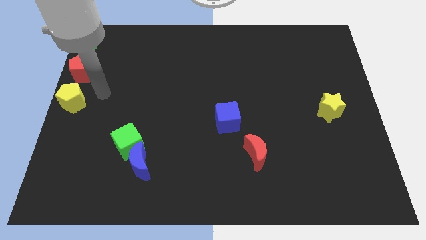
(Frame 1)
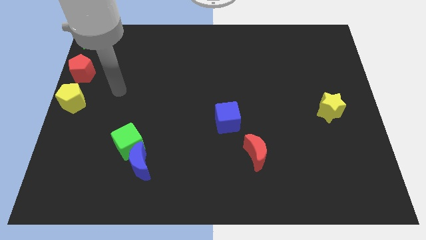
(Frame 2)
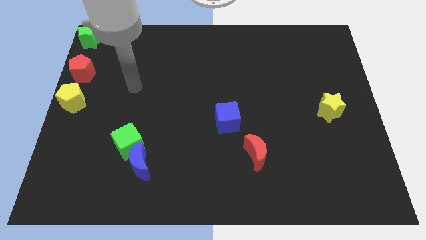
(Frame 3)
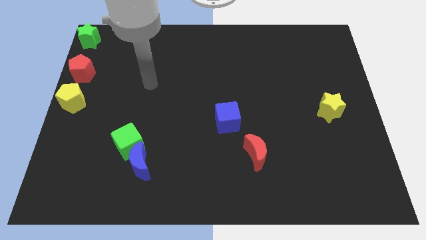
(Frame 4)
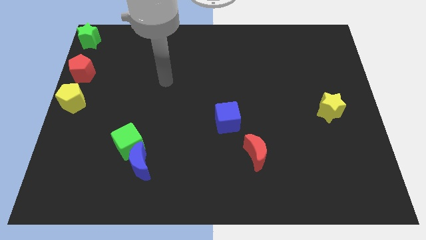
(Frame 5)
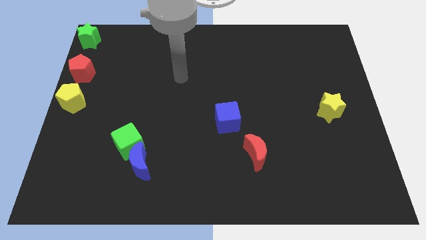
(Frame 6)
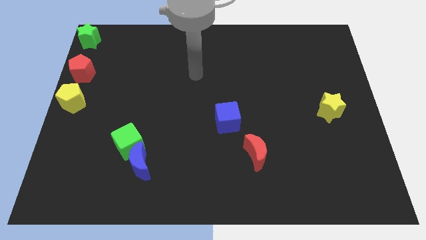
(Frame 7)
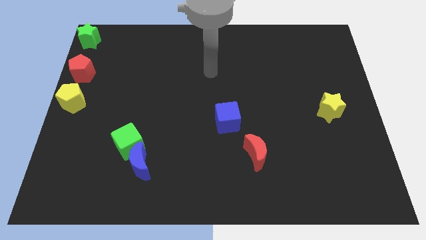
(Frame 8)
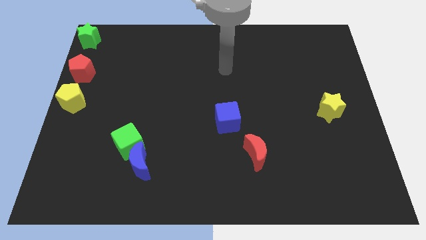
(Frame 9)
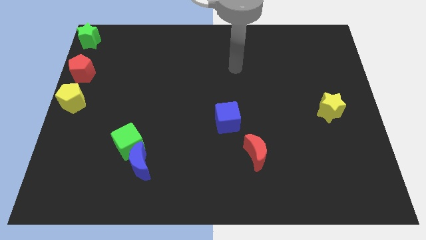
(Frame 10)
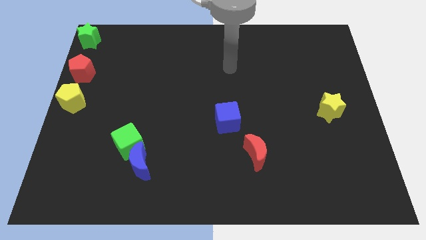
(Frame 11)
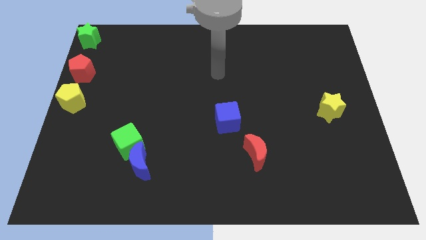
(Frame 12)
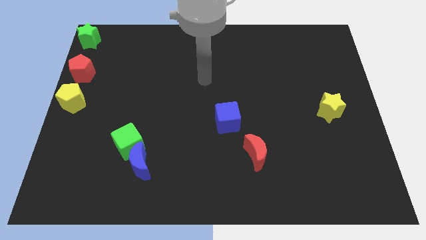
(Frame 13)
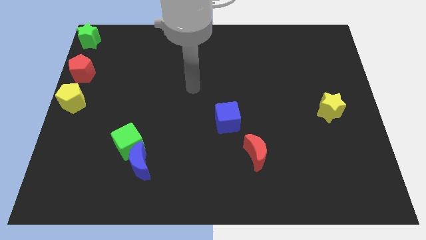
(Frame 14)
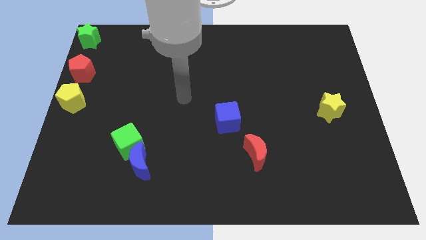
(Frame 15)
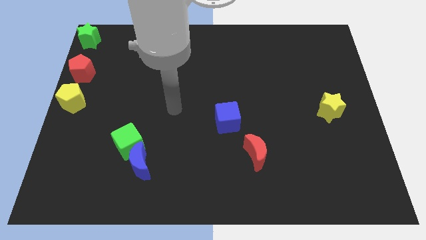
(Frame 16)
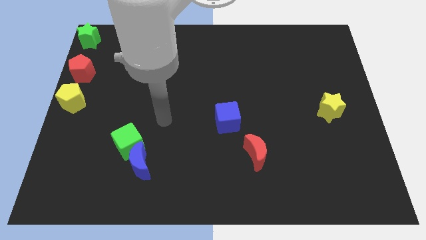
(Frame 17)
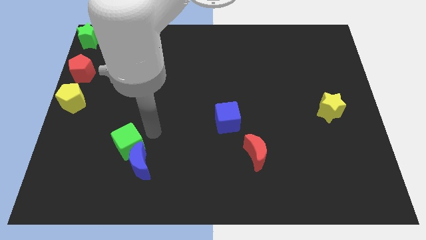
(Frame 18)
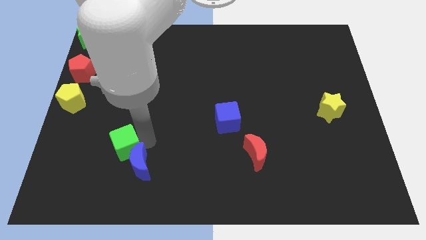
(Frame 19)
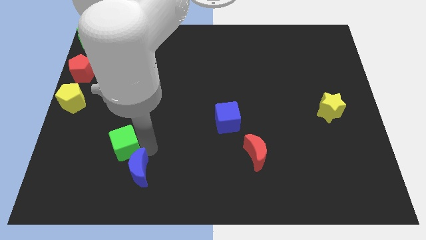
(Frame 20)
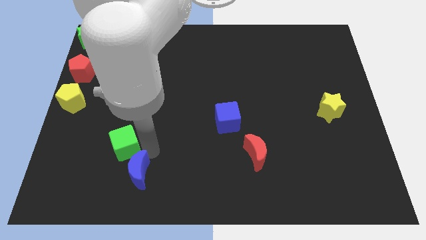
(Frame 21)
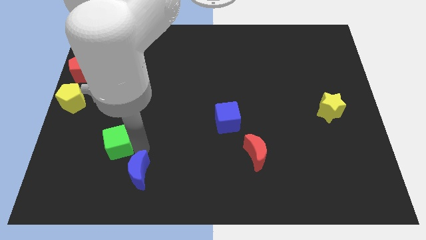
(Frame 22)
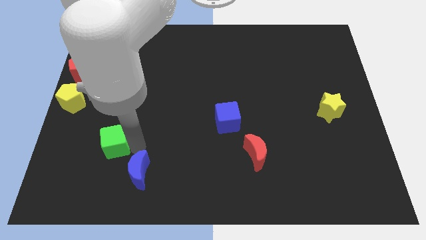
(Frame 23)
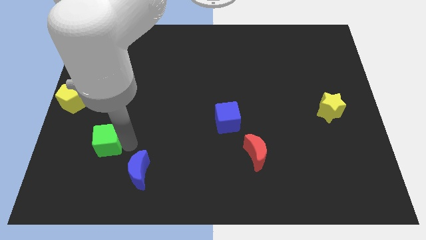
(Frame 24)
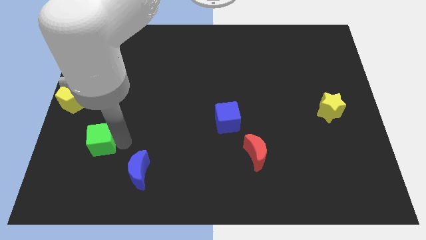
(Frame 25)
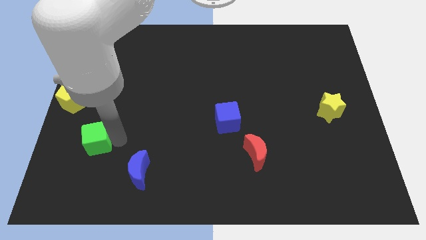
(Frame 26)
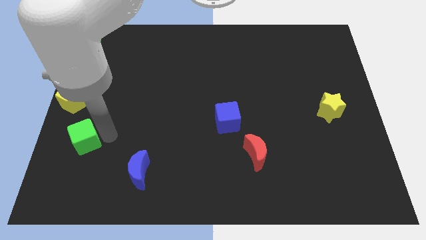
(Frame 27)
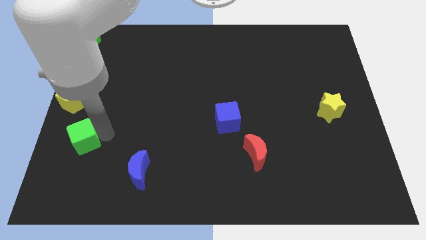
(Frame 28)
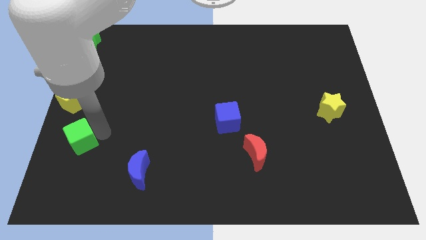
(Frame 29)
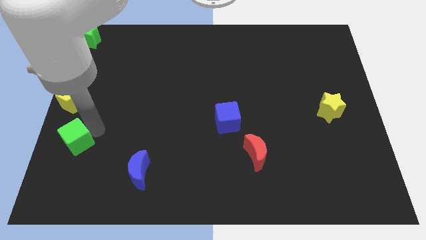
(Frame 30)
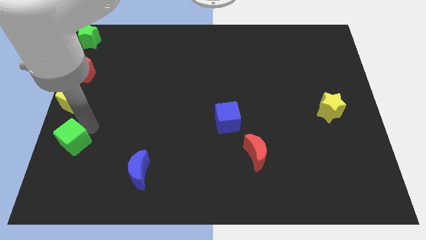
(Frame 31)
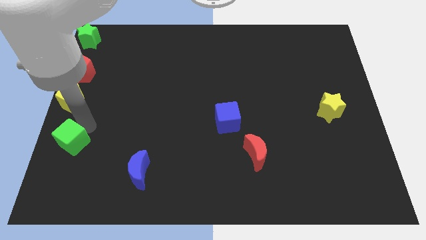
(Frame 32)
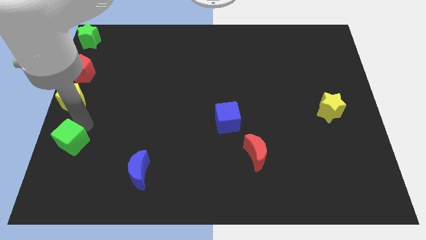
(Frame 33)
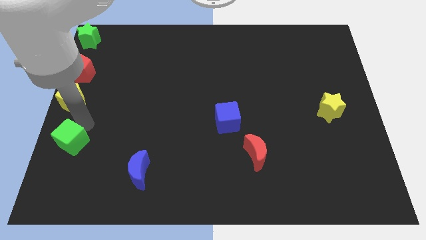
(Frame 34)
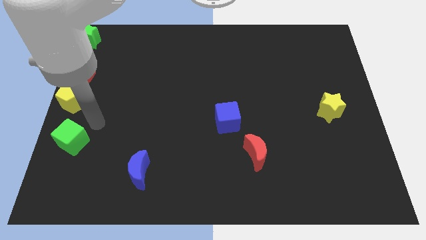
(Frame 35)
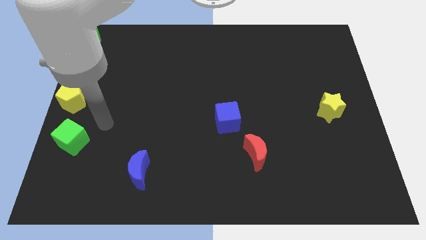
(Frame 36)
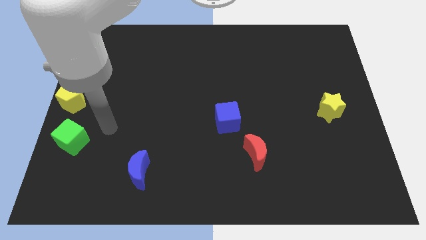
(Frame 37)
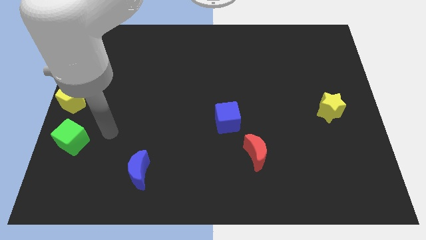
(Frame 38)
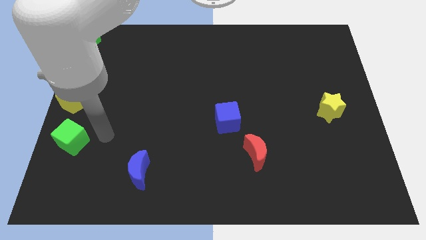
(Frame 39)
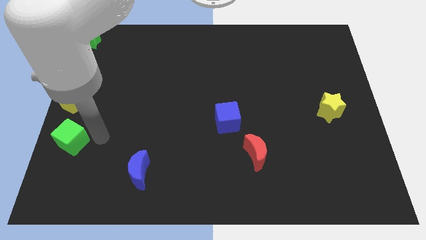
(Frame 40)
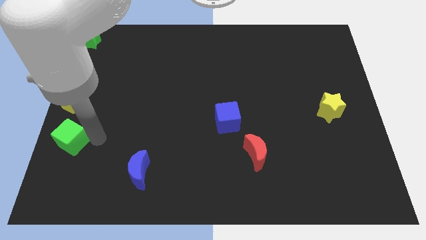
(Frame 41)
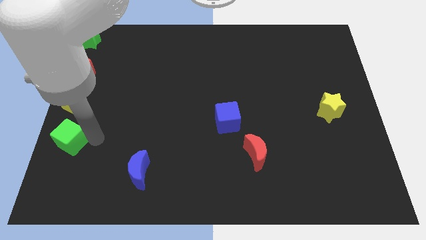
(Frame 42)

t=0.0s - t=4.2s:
separate green cube from blue crescent

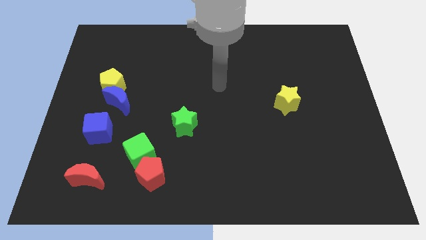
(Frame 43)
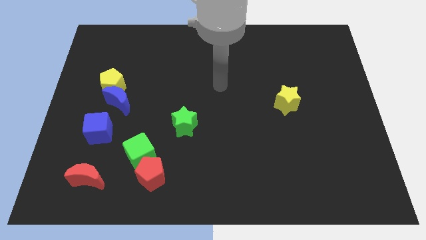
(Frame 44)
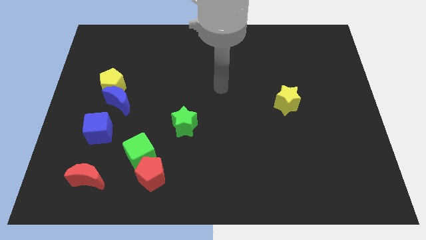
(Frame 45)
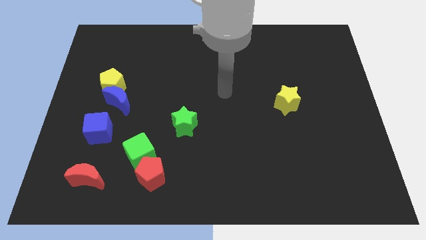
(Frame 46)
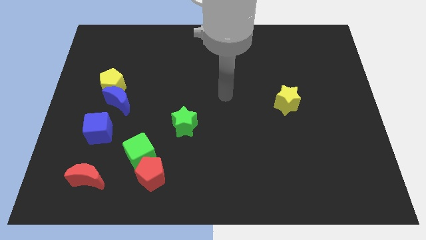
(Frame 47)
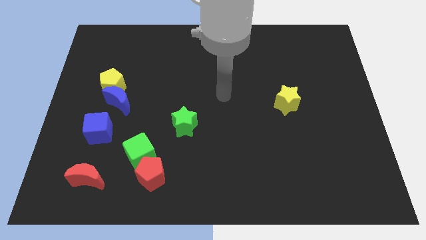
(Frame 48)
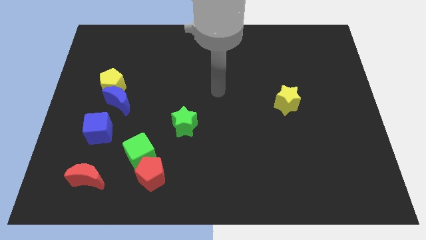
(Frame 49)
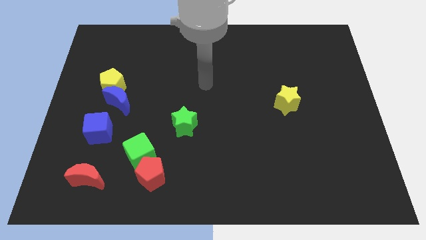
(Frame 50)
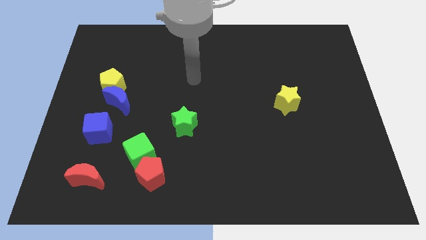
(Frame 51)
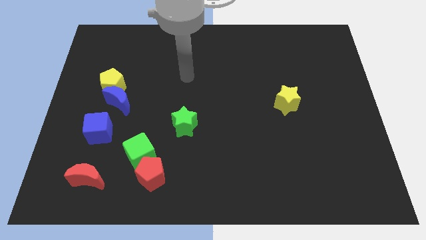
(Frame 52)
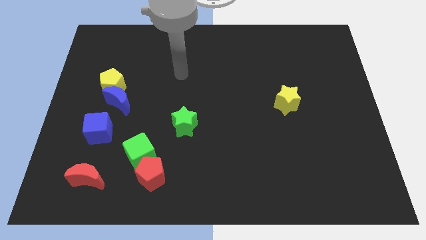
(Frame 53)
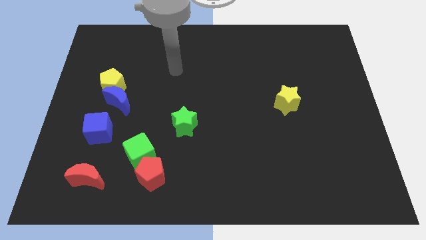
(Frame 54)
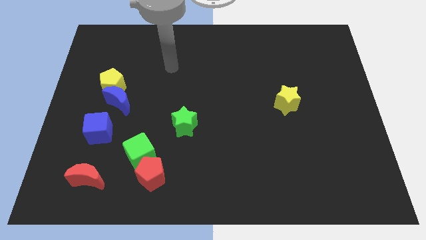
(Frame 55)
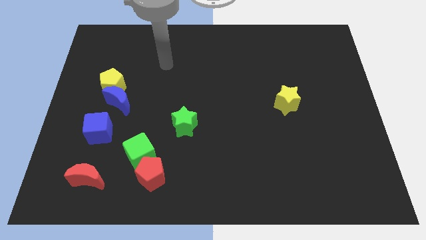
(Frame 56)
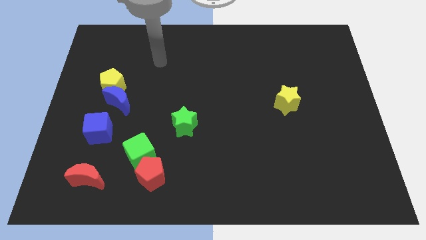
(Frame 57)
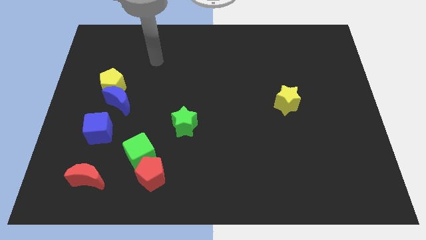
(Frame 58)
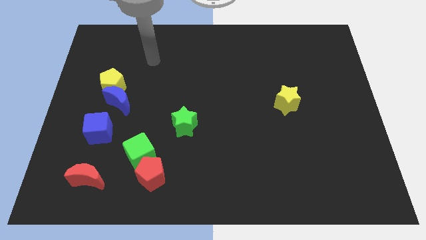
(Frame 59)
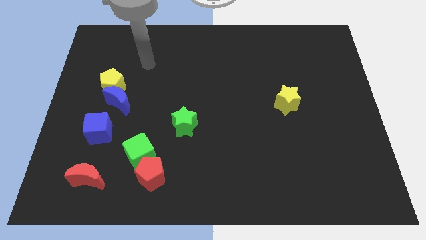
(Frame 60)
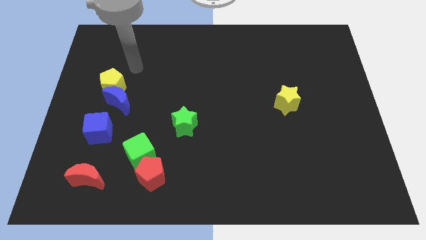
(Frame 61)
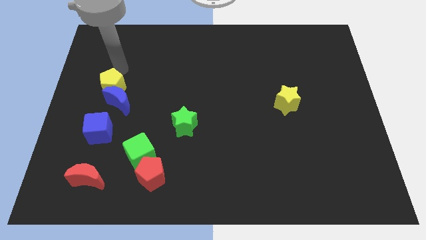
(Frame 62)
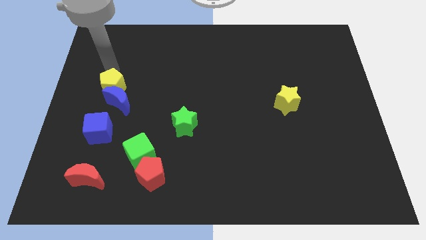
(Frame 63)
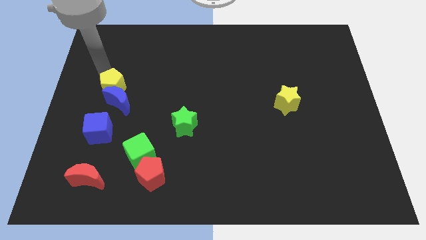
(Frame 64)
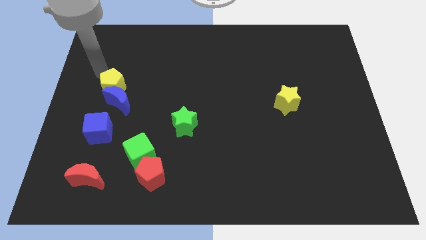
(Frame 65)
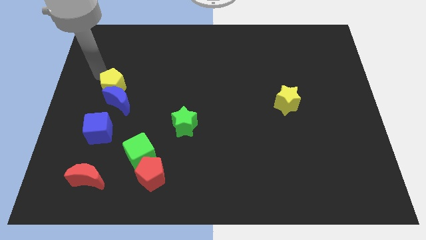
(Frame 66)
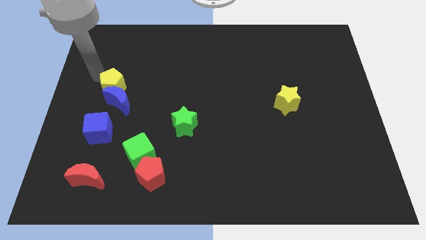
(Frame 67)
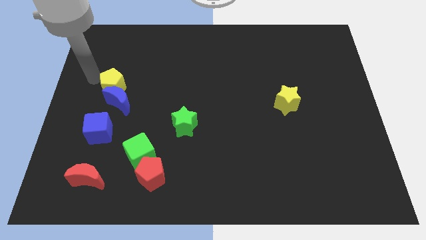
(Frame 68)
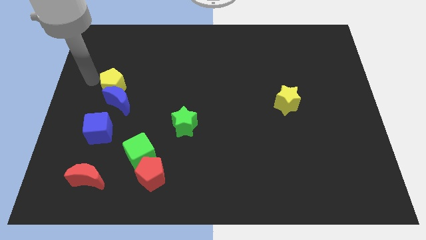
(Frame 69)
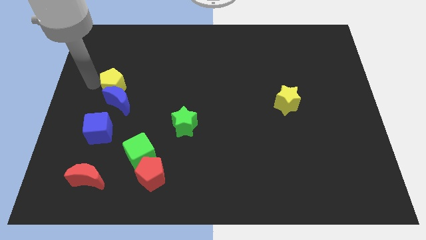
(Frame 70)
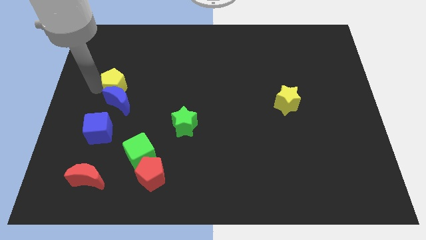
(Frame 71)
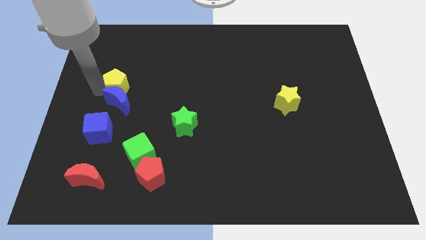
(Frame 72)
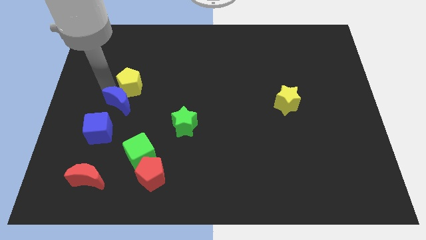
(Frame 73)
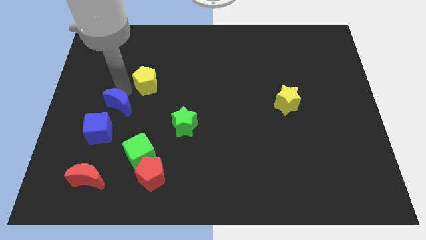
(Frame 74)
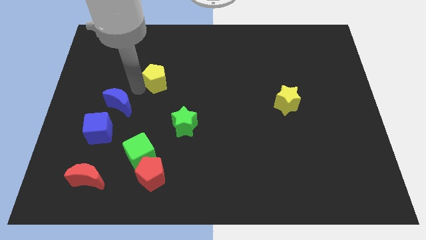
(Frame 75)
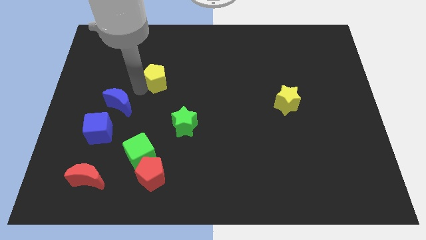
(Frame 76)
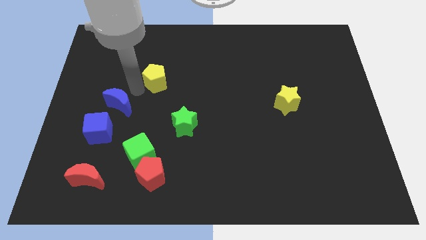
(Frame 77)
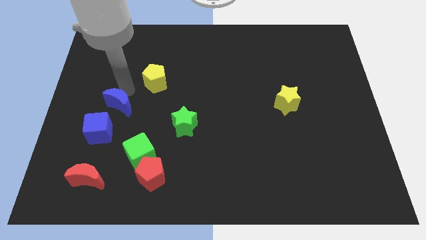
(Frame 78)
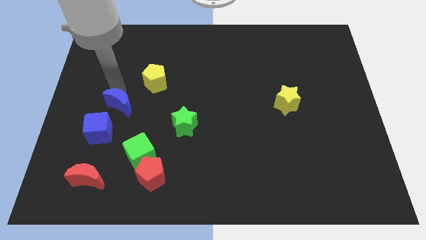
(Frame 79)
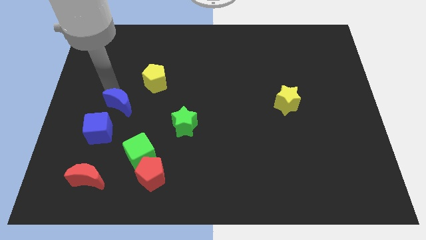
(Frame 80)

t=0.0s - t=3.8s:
separate the yellow pentagon from blue crescent

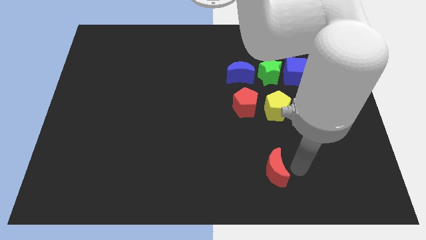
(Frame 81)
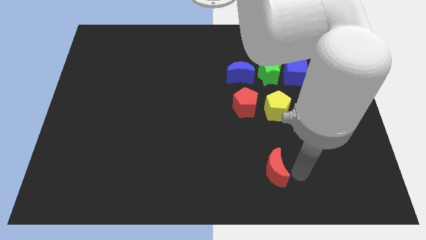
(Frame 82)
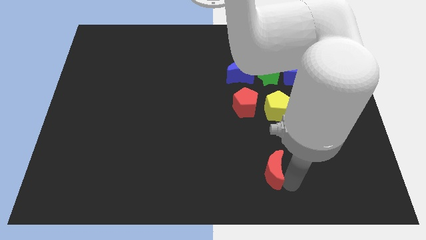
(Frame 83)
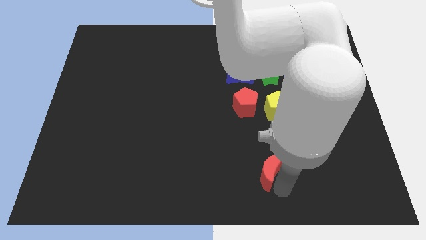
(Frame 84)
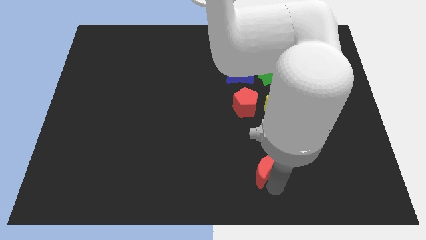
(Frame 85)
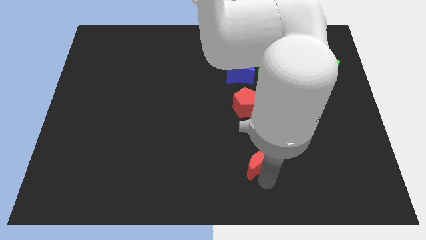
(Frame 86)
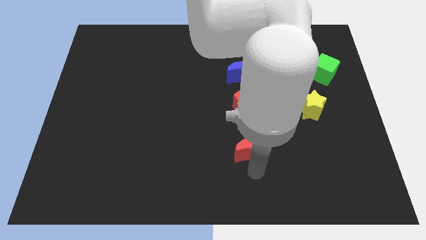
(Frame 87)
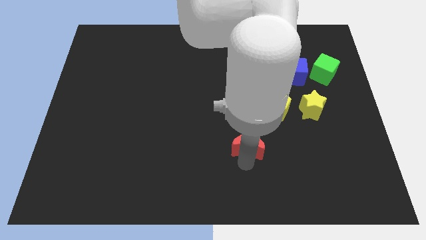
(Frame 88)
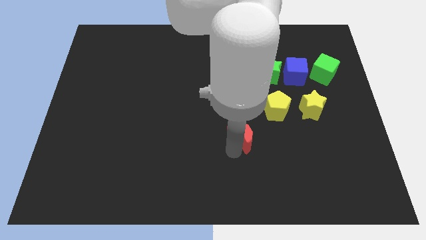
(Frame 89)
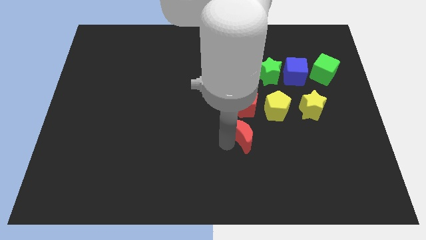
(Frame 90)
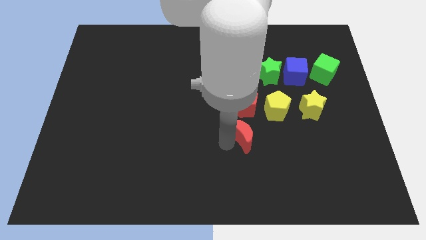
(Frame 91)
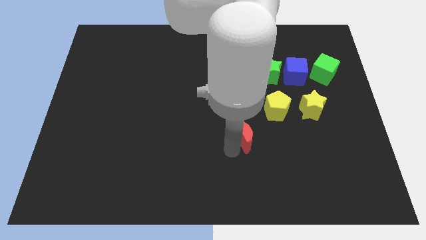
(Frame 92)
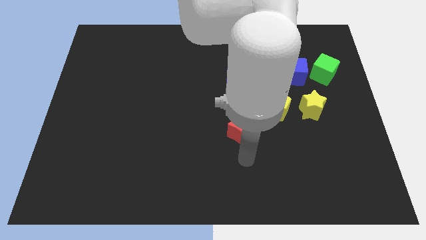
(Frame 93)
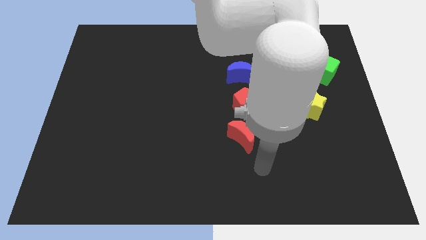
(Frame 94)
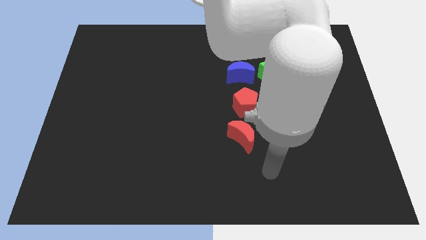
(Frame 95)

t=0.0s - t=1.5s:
arrange the red crescent at the bottom of the red pentagon
